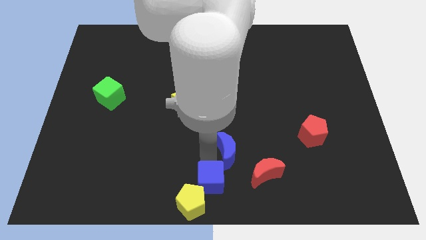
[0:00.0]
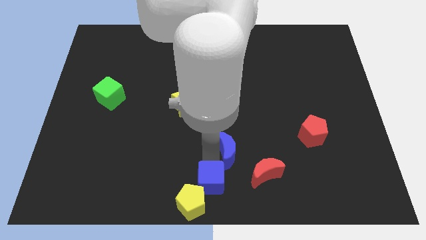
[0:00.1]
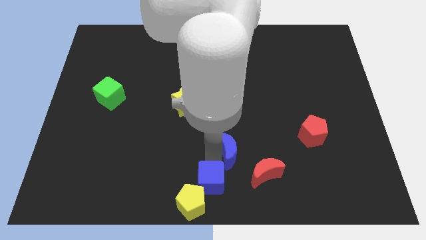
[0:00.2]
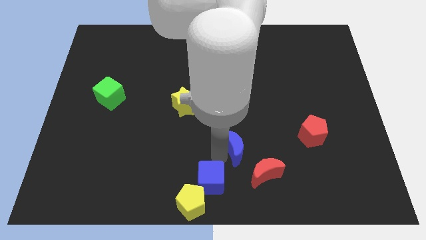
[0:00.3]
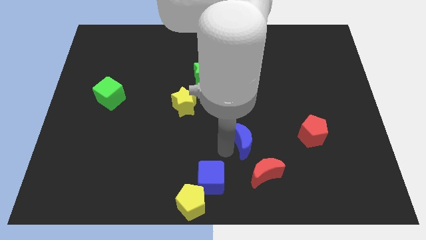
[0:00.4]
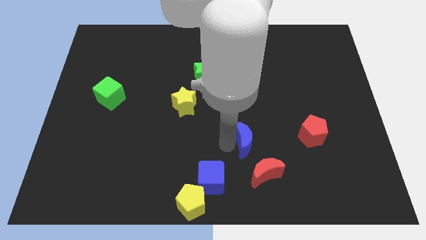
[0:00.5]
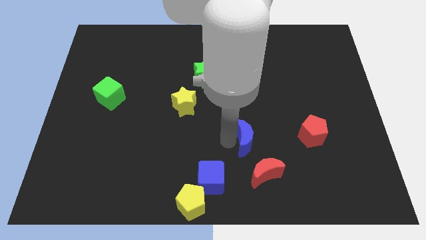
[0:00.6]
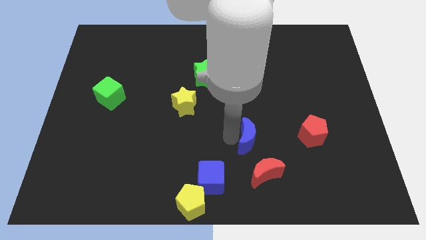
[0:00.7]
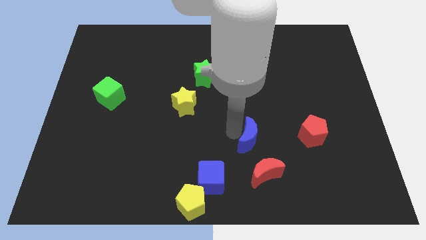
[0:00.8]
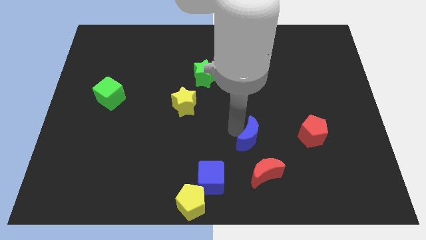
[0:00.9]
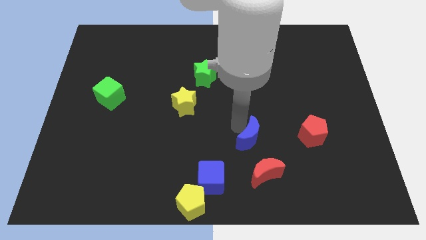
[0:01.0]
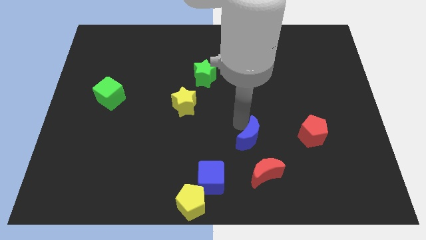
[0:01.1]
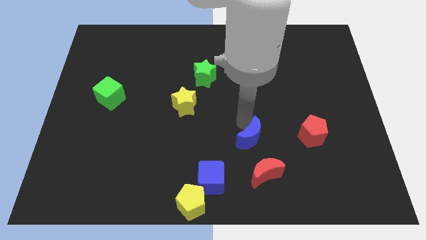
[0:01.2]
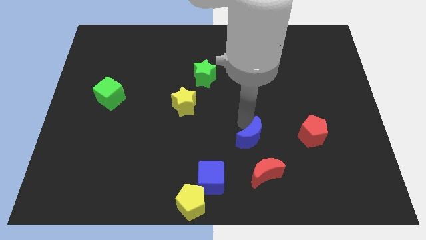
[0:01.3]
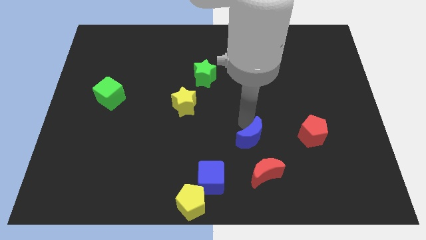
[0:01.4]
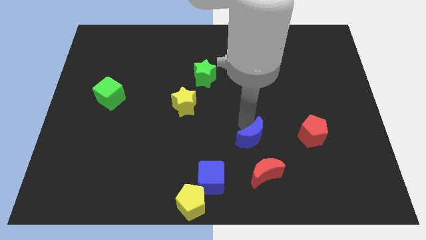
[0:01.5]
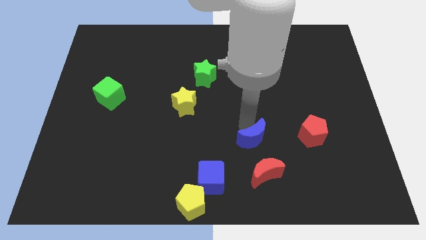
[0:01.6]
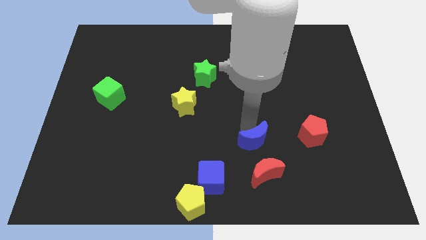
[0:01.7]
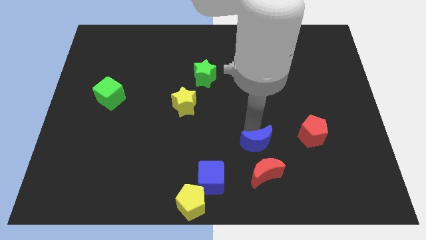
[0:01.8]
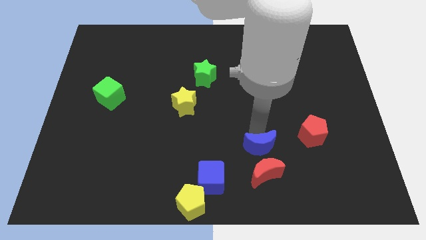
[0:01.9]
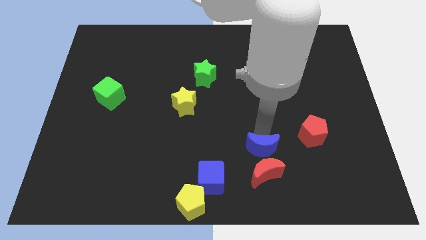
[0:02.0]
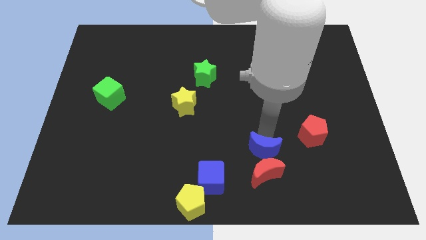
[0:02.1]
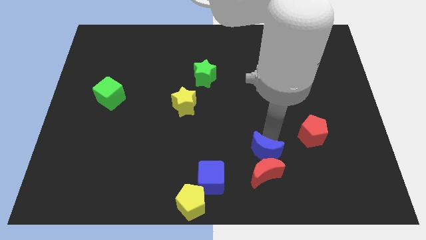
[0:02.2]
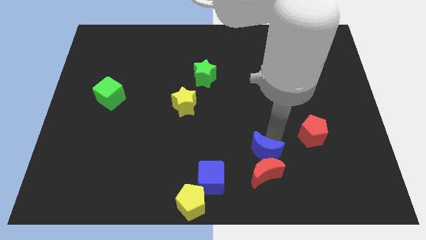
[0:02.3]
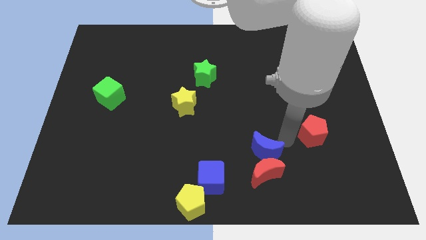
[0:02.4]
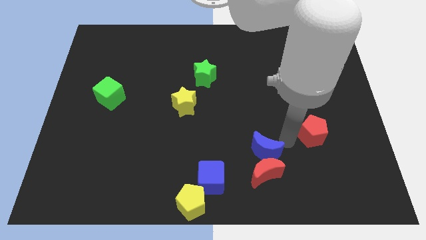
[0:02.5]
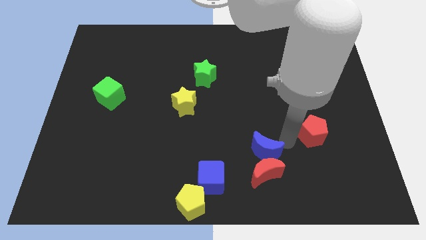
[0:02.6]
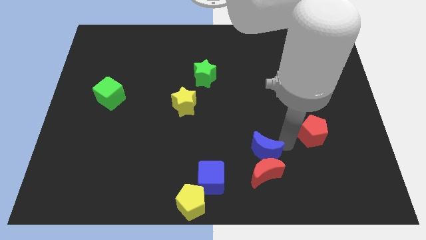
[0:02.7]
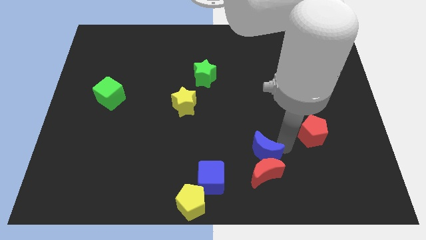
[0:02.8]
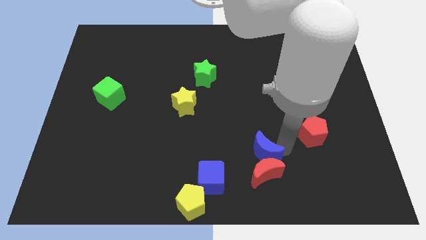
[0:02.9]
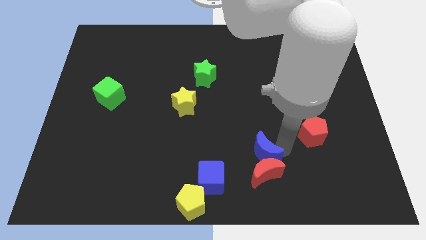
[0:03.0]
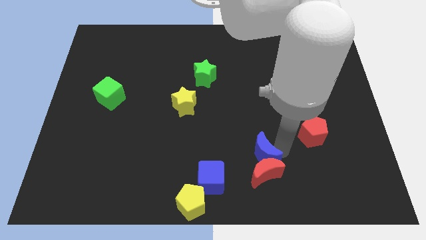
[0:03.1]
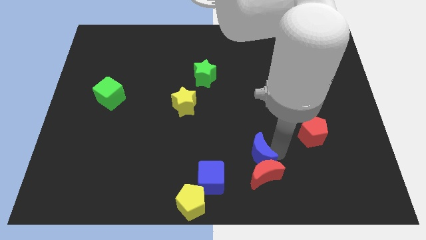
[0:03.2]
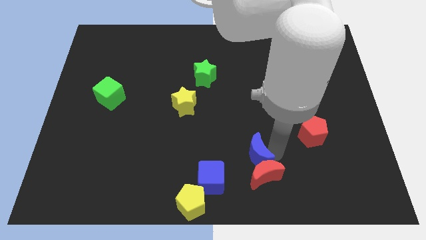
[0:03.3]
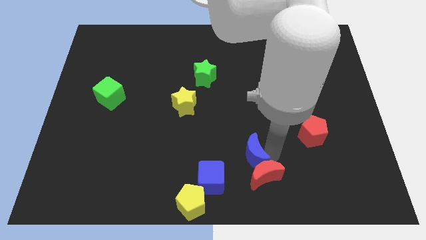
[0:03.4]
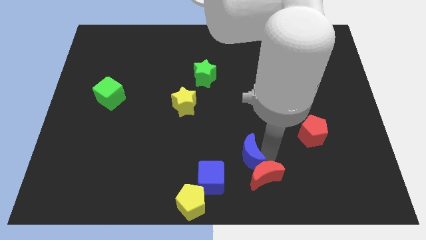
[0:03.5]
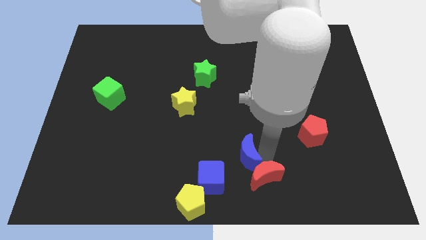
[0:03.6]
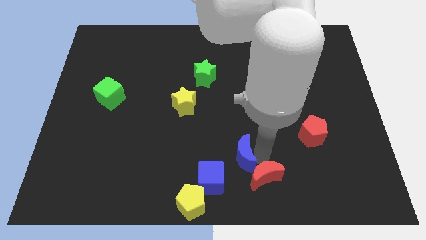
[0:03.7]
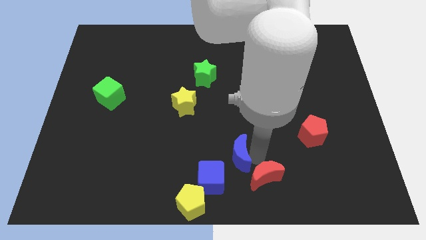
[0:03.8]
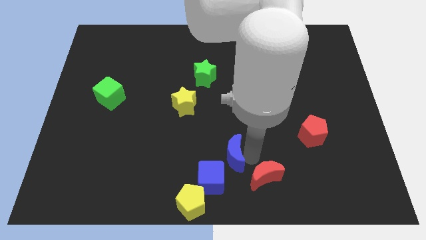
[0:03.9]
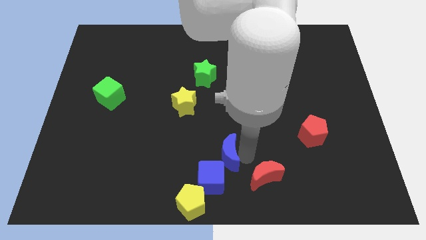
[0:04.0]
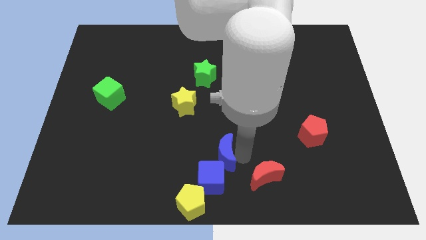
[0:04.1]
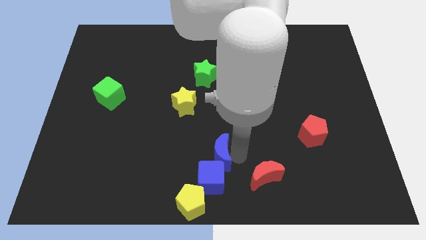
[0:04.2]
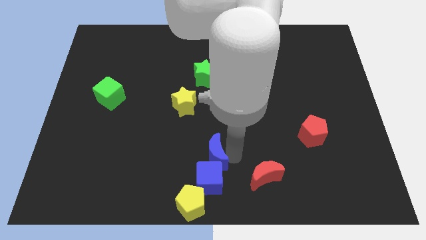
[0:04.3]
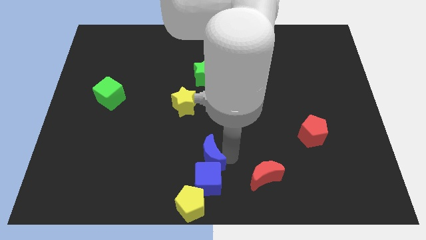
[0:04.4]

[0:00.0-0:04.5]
place the blue crescent above the blue cube

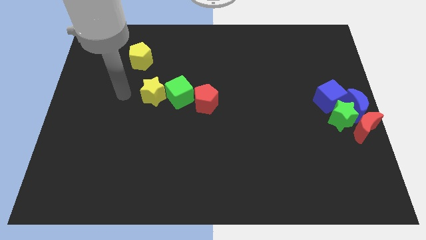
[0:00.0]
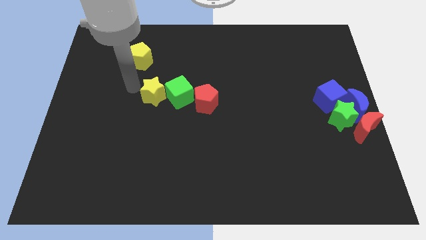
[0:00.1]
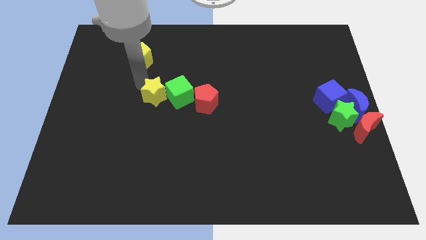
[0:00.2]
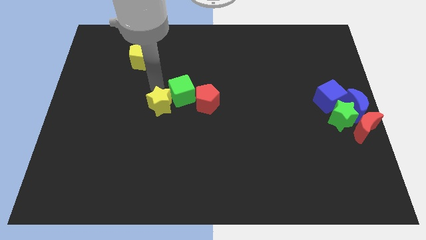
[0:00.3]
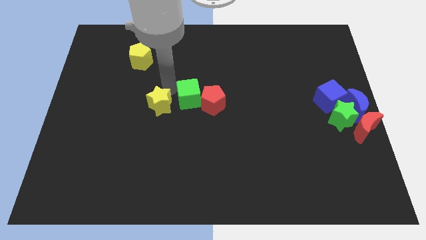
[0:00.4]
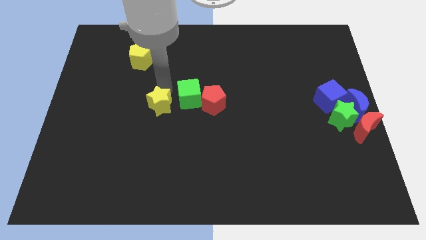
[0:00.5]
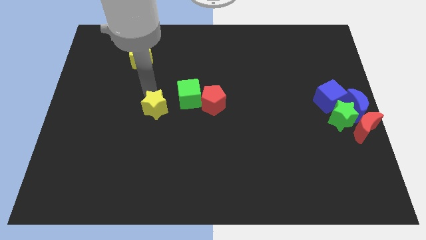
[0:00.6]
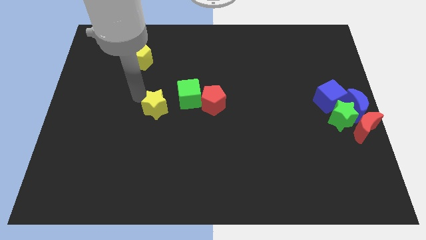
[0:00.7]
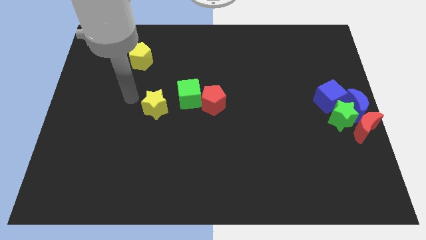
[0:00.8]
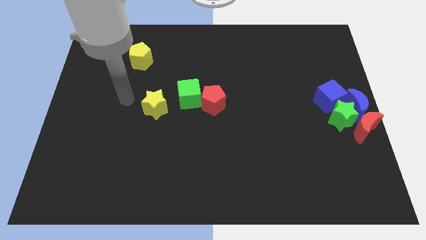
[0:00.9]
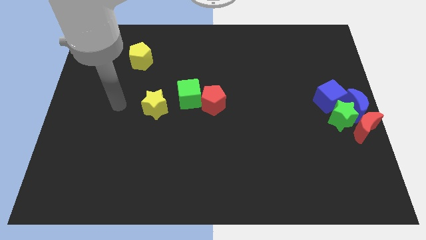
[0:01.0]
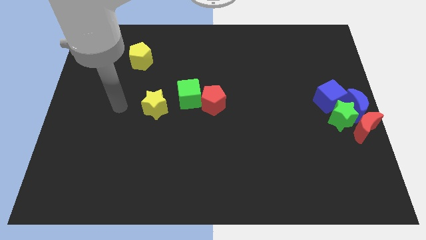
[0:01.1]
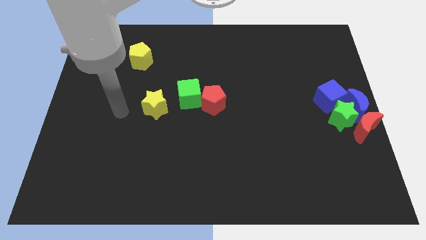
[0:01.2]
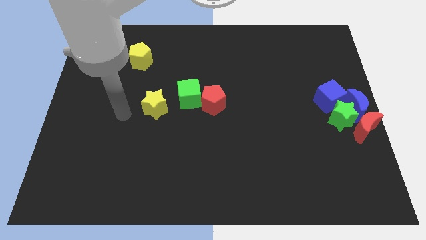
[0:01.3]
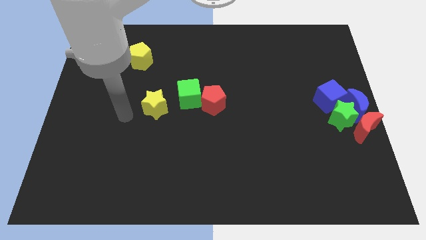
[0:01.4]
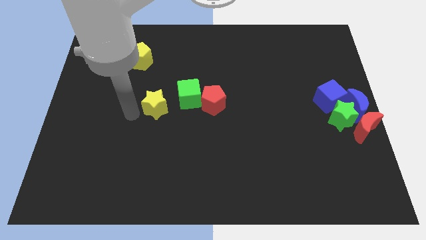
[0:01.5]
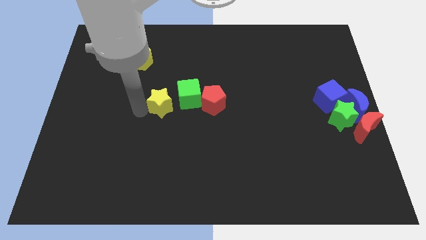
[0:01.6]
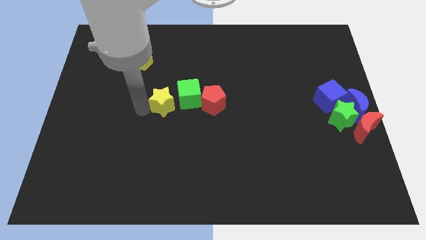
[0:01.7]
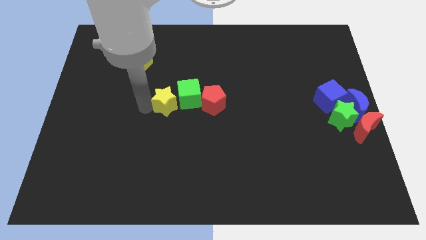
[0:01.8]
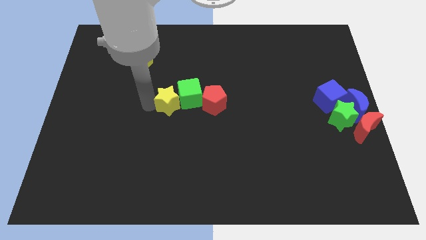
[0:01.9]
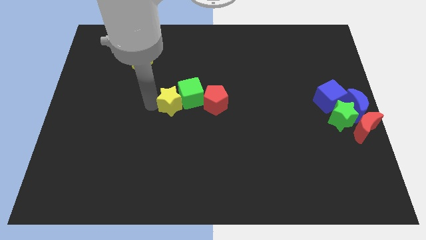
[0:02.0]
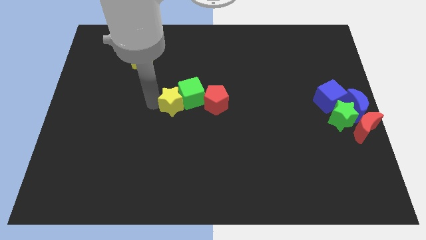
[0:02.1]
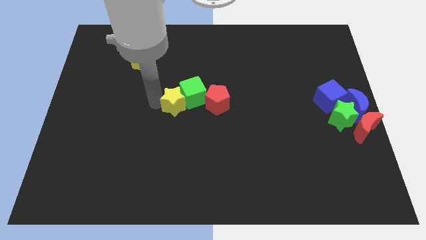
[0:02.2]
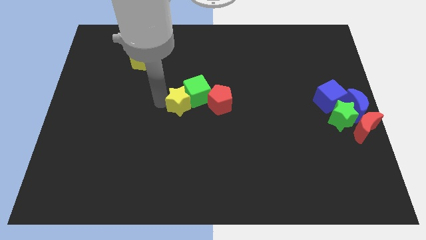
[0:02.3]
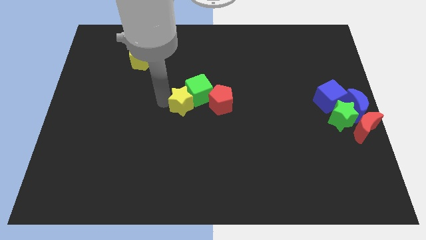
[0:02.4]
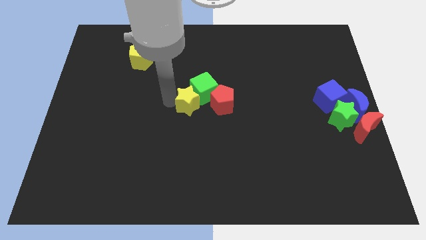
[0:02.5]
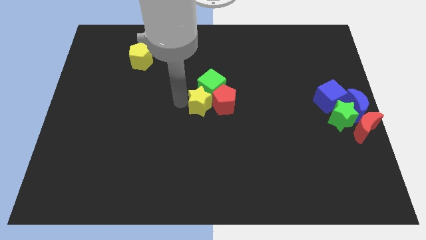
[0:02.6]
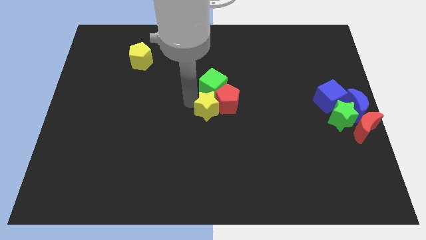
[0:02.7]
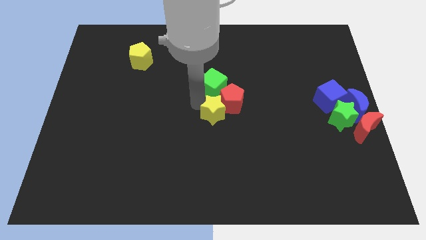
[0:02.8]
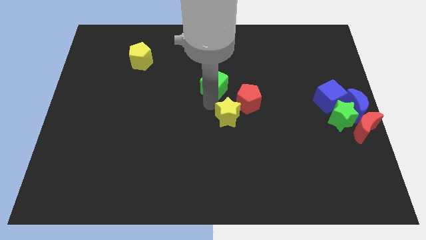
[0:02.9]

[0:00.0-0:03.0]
separate green cube and yellow star

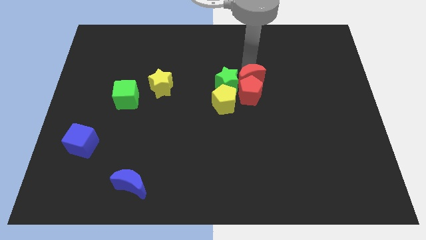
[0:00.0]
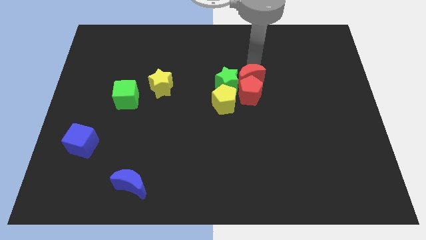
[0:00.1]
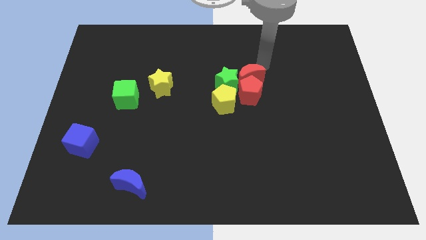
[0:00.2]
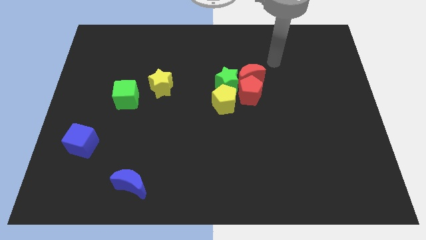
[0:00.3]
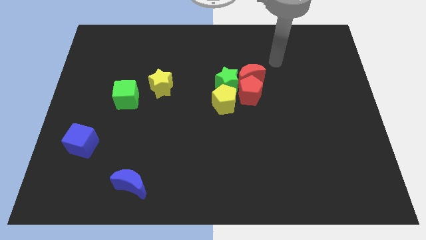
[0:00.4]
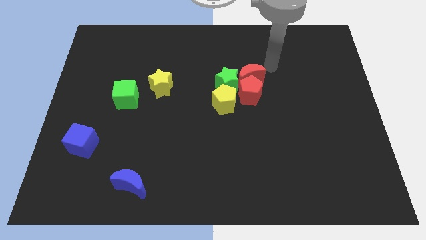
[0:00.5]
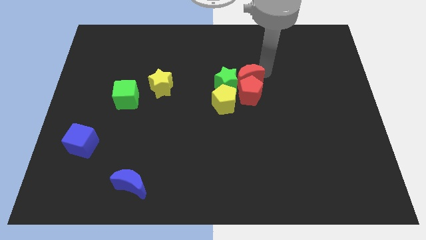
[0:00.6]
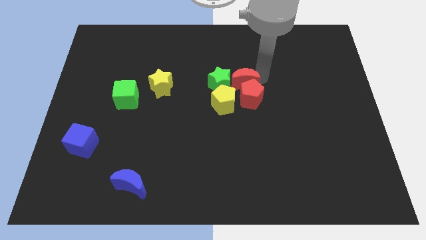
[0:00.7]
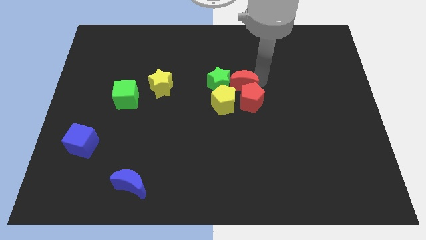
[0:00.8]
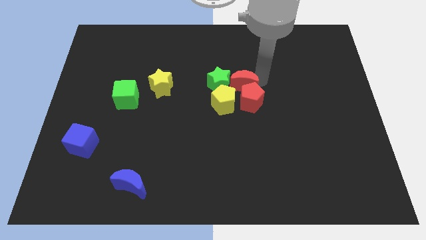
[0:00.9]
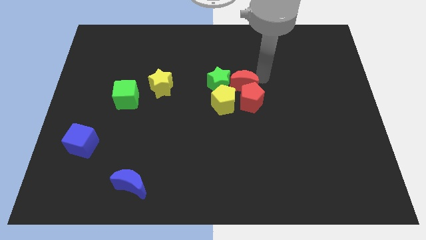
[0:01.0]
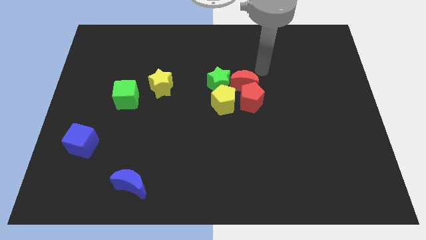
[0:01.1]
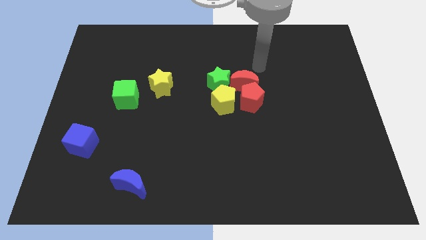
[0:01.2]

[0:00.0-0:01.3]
adjust the group of blocks at the center of the board

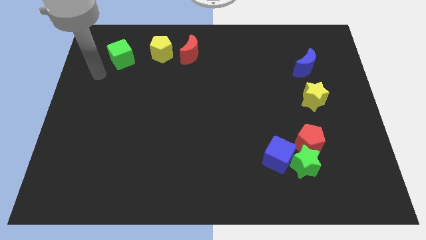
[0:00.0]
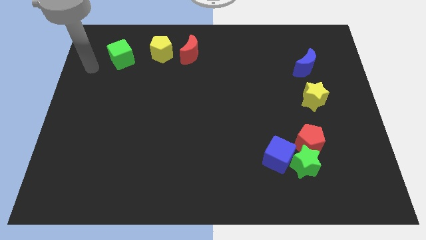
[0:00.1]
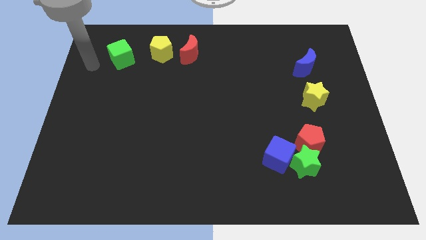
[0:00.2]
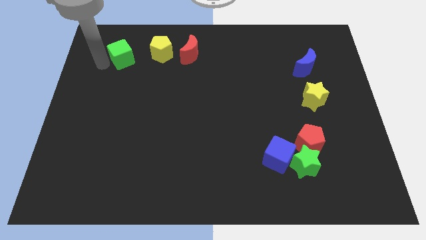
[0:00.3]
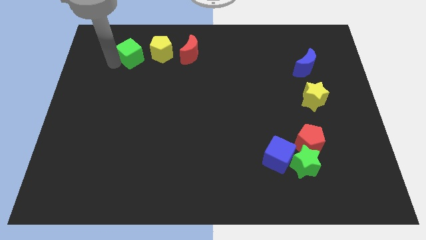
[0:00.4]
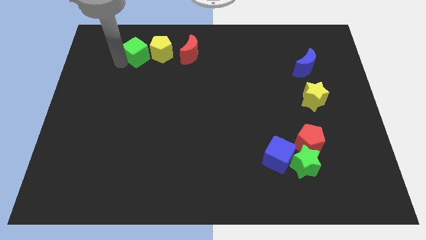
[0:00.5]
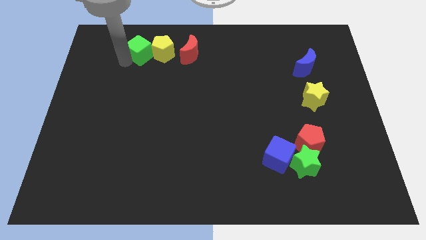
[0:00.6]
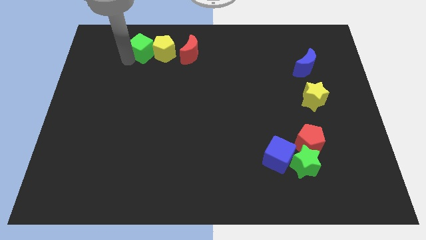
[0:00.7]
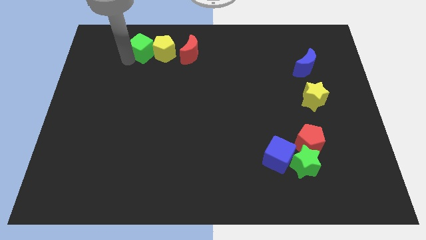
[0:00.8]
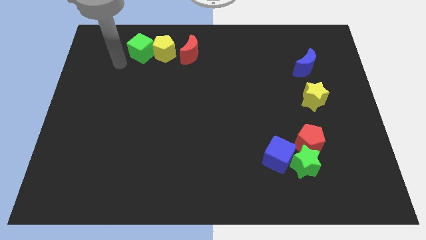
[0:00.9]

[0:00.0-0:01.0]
move green cube into yellow pentagon
